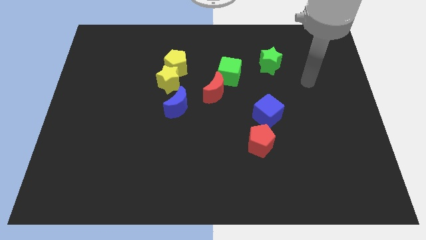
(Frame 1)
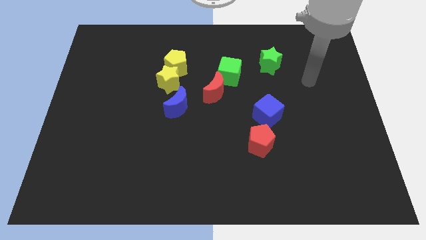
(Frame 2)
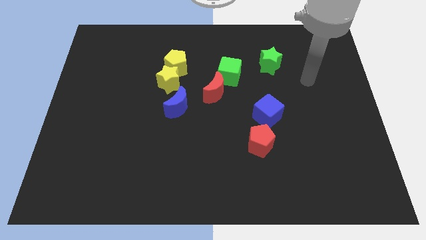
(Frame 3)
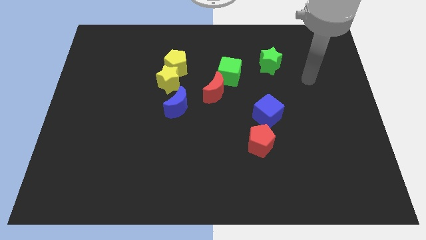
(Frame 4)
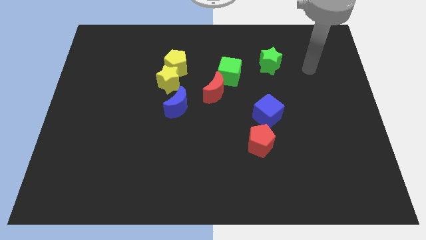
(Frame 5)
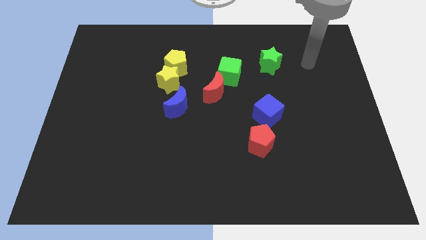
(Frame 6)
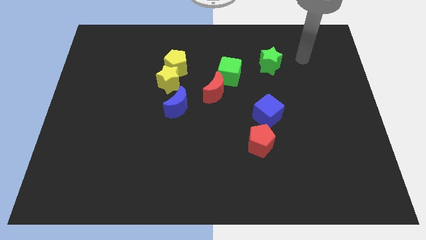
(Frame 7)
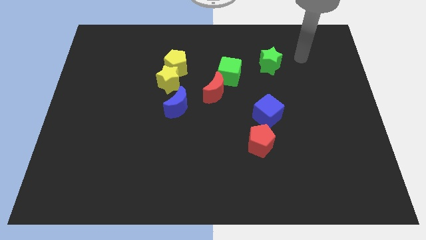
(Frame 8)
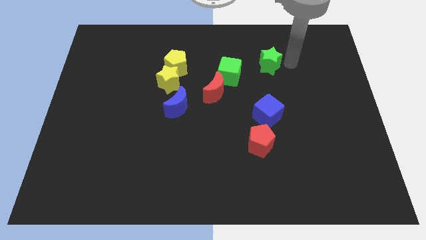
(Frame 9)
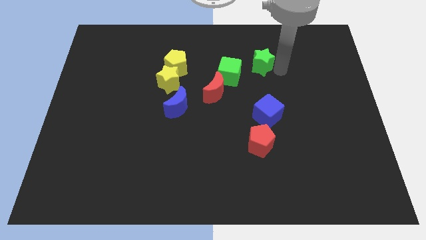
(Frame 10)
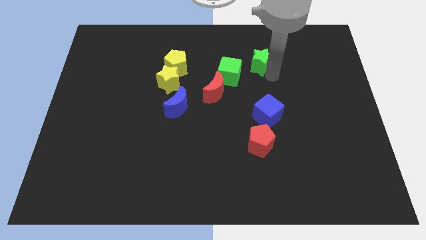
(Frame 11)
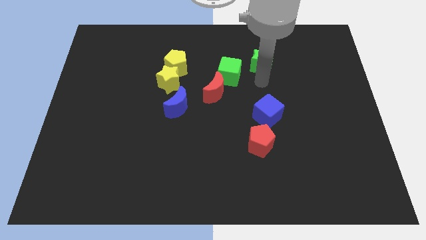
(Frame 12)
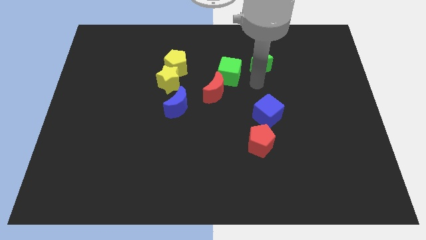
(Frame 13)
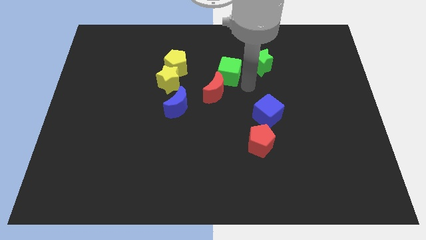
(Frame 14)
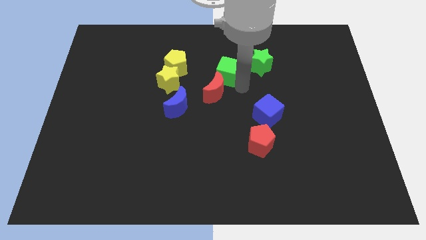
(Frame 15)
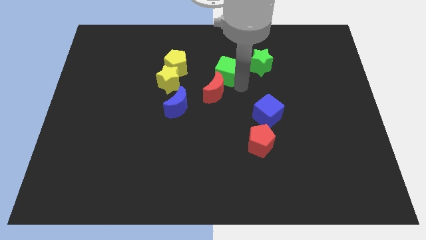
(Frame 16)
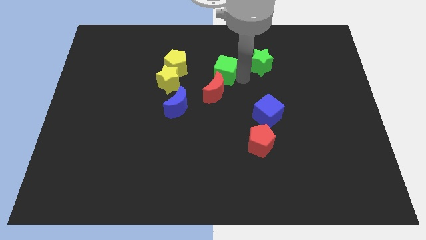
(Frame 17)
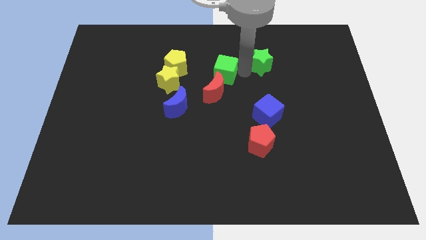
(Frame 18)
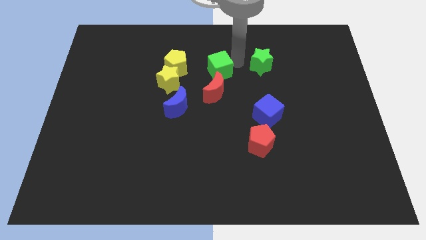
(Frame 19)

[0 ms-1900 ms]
push the green star and the green cube parallel to each other

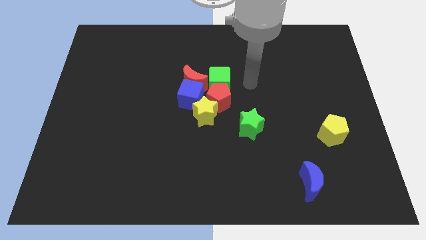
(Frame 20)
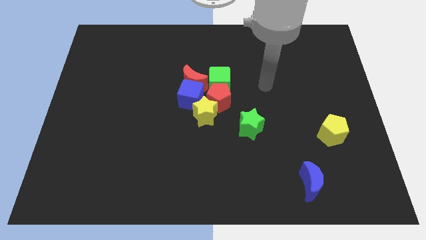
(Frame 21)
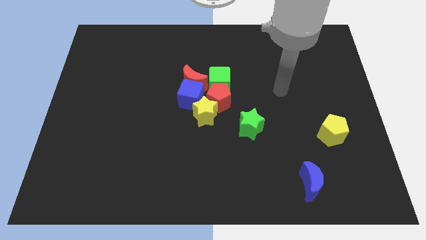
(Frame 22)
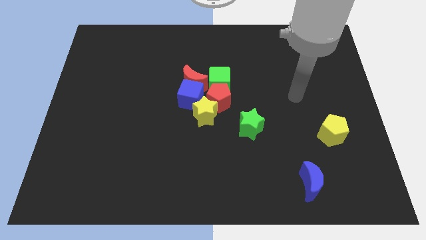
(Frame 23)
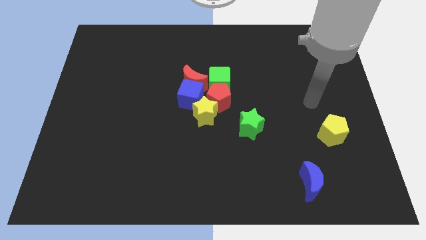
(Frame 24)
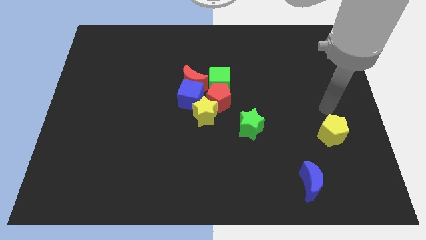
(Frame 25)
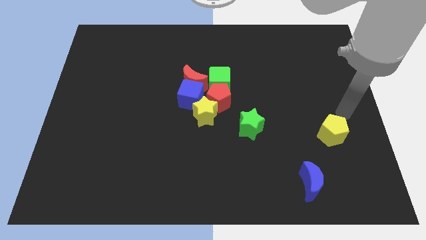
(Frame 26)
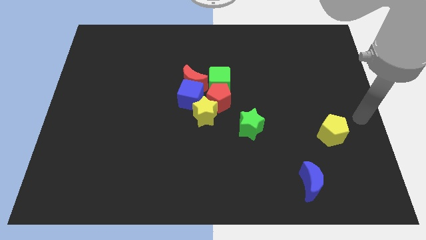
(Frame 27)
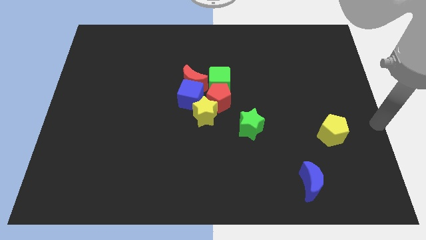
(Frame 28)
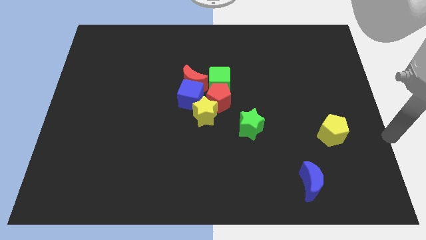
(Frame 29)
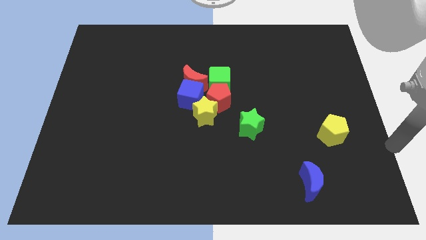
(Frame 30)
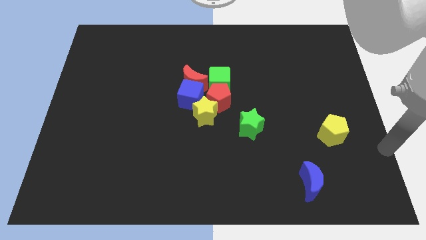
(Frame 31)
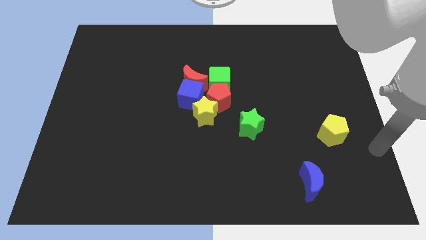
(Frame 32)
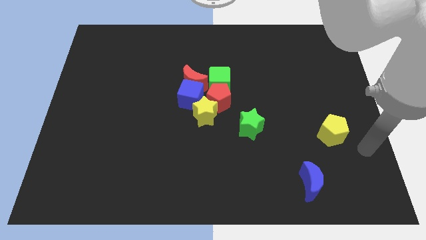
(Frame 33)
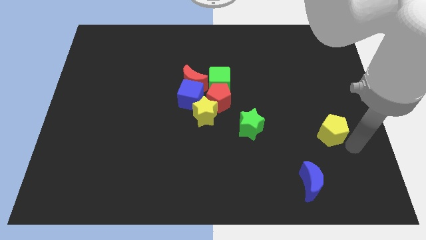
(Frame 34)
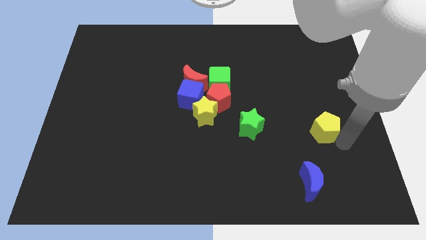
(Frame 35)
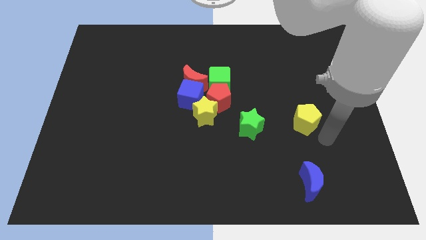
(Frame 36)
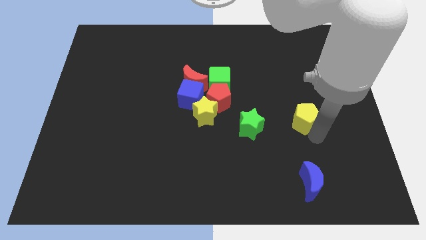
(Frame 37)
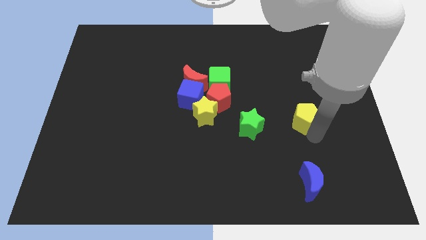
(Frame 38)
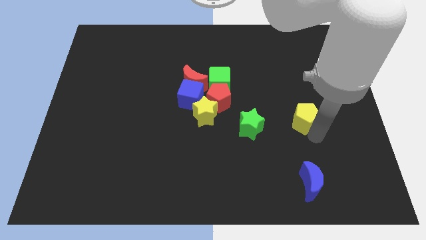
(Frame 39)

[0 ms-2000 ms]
push the yellow pentagon to the top of the blue crescent

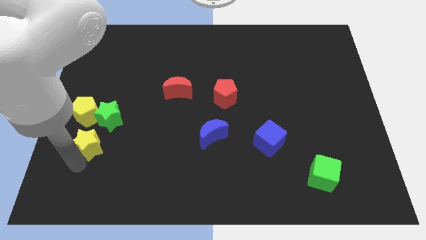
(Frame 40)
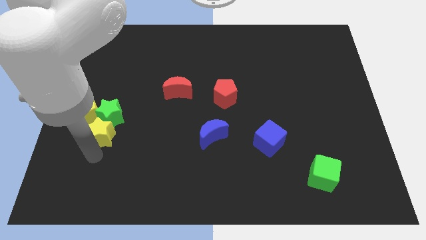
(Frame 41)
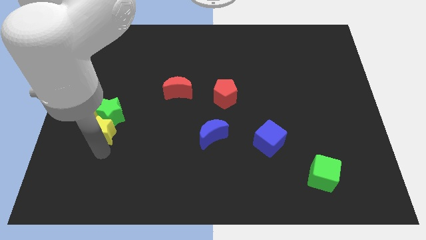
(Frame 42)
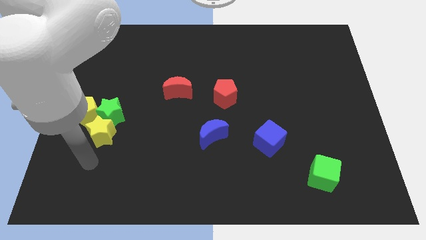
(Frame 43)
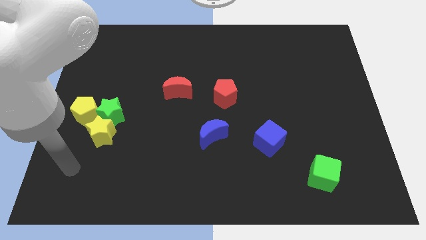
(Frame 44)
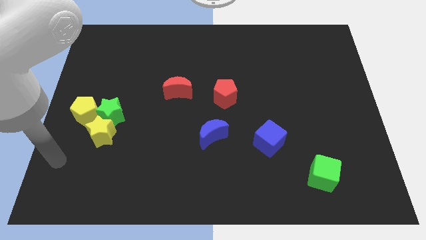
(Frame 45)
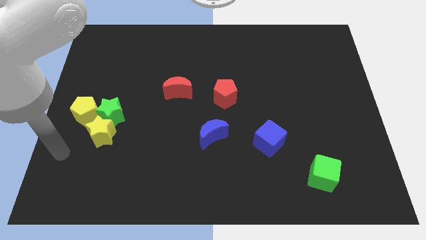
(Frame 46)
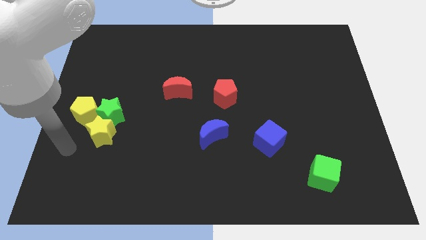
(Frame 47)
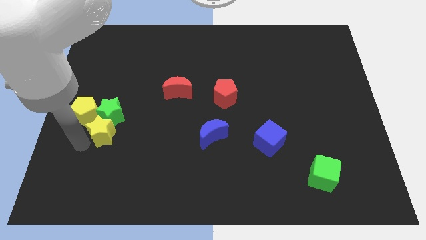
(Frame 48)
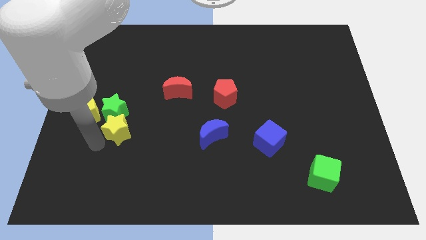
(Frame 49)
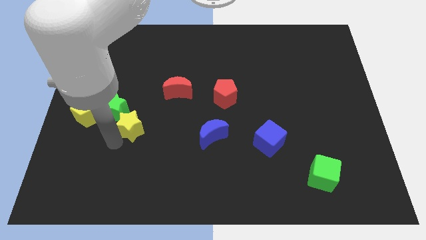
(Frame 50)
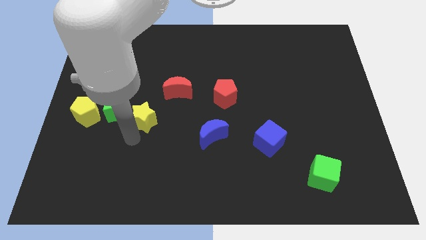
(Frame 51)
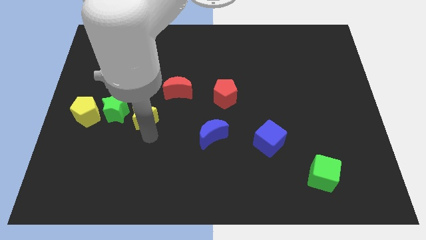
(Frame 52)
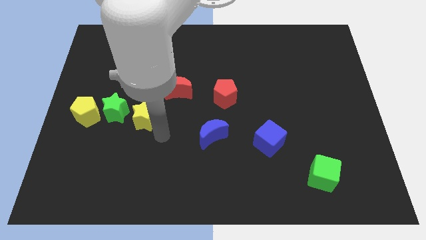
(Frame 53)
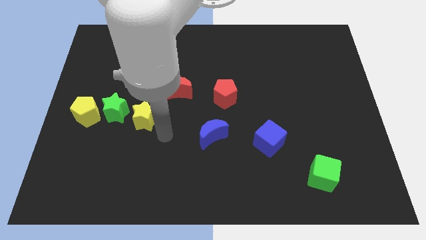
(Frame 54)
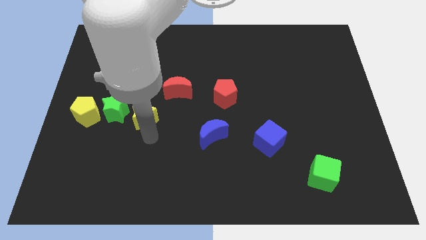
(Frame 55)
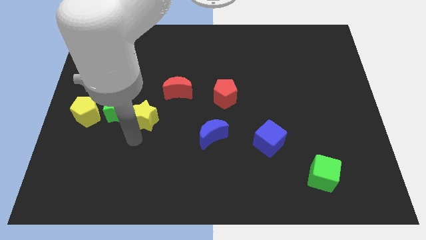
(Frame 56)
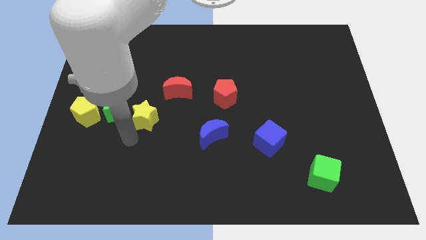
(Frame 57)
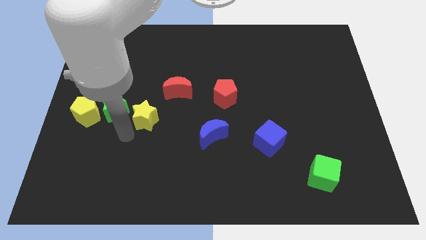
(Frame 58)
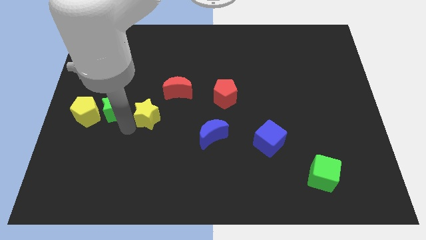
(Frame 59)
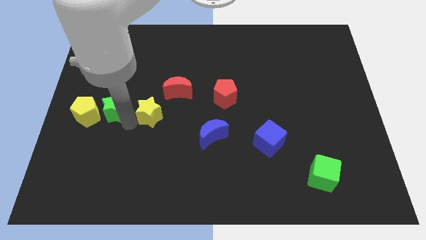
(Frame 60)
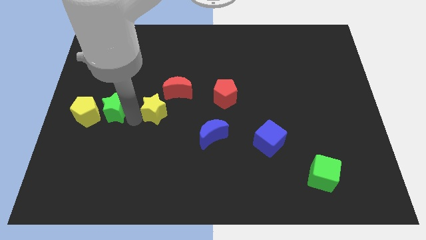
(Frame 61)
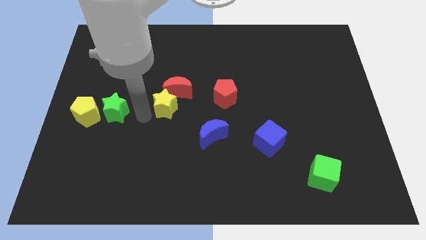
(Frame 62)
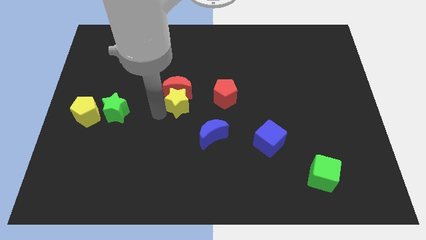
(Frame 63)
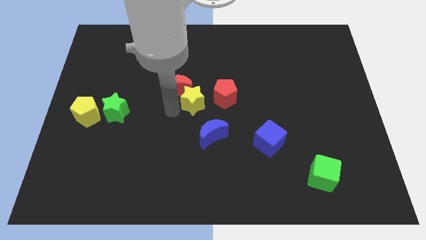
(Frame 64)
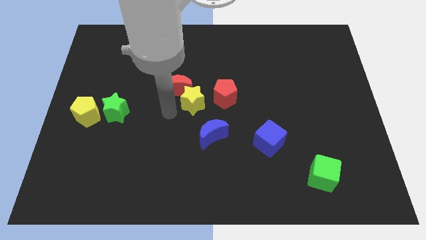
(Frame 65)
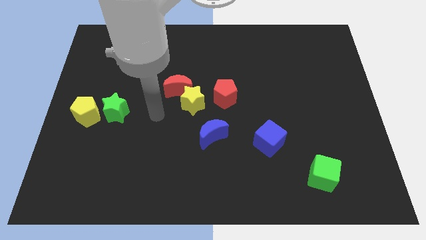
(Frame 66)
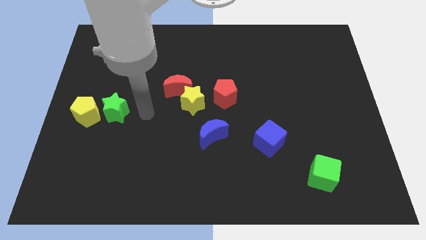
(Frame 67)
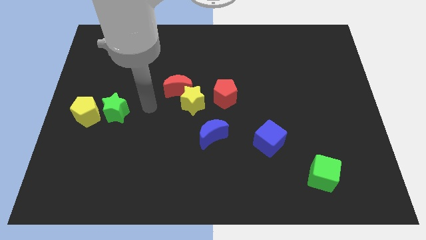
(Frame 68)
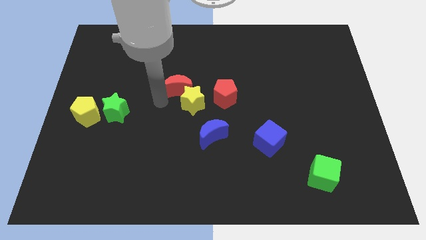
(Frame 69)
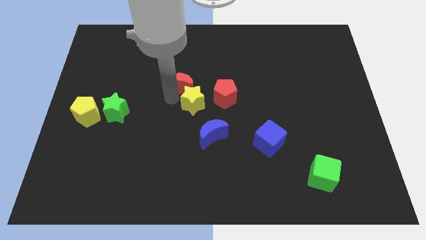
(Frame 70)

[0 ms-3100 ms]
slide yellow star into red moon

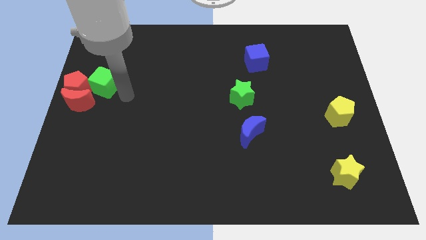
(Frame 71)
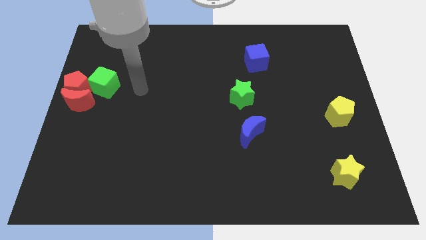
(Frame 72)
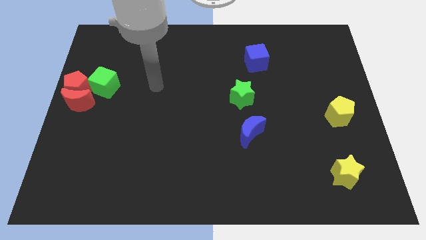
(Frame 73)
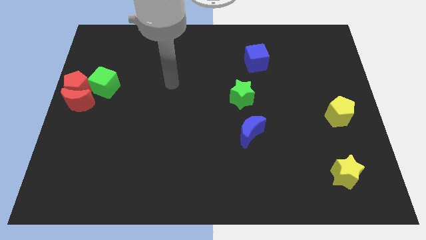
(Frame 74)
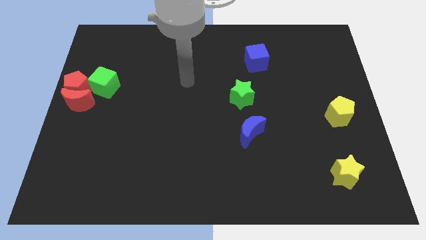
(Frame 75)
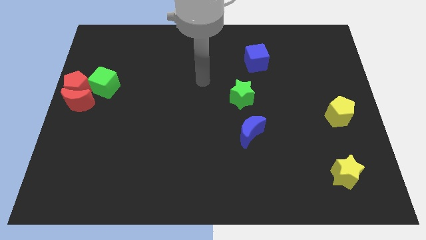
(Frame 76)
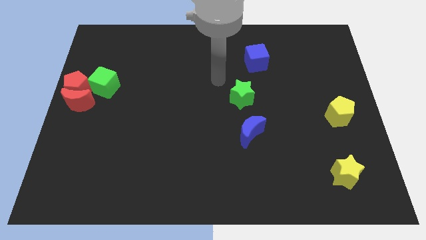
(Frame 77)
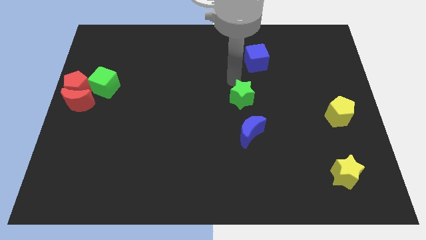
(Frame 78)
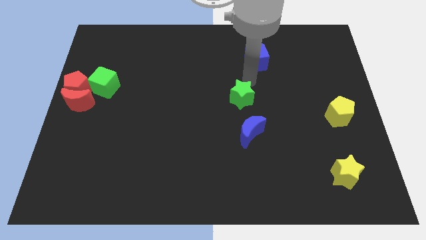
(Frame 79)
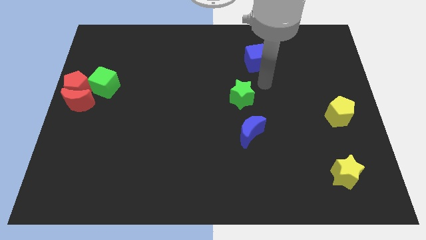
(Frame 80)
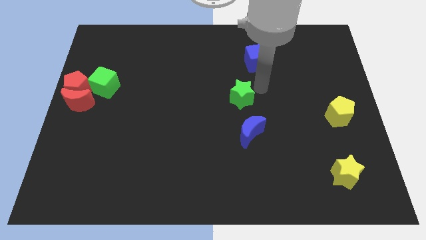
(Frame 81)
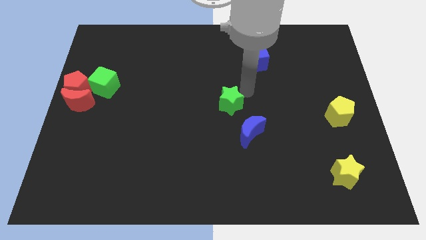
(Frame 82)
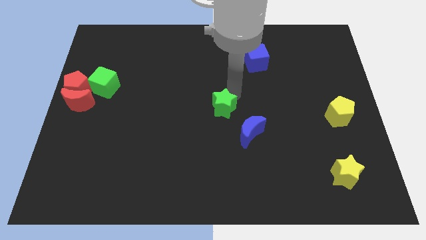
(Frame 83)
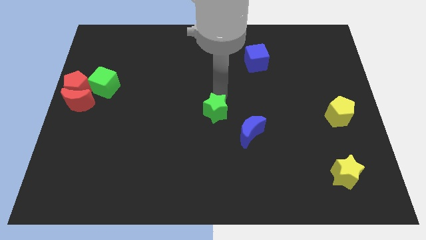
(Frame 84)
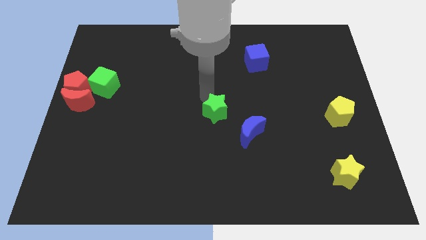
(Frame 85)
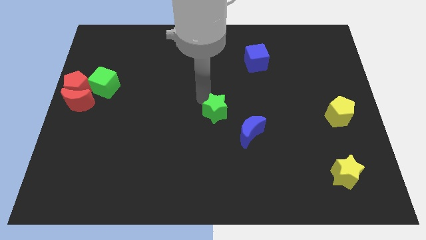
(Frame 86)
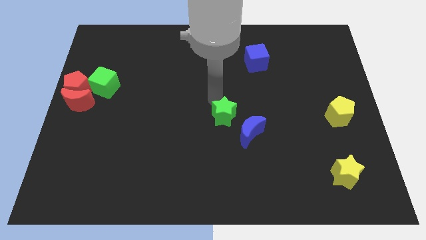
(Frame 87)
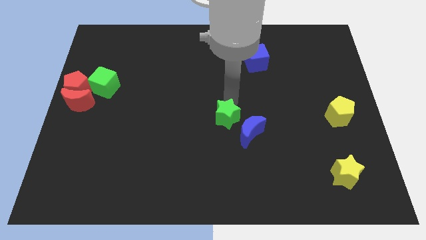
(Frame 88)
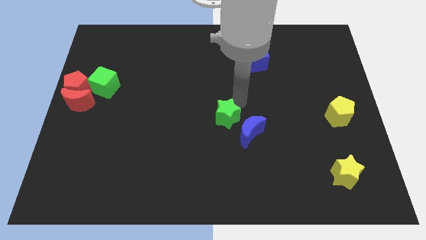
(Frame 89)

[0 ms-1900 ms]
place the green star parallel to the yellow pentagon

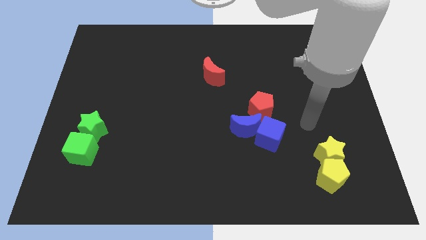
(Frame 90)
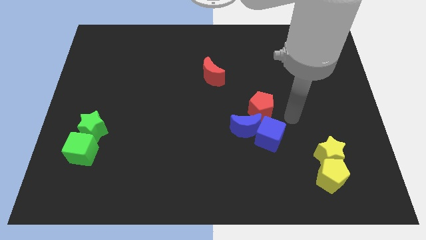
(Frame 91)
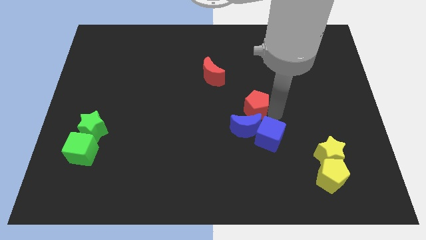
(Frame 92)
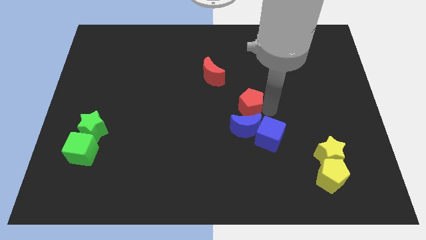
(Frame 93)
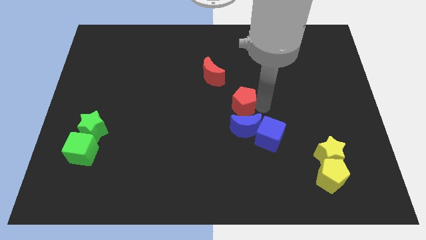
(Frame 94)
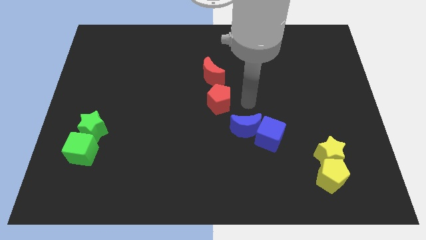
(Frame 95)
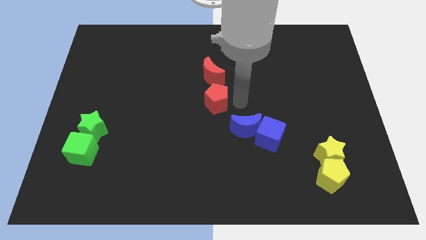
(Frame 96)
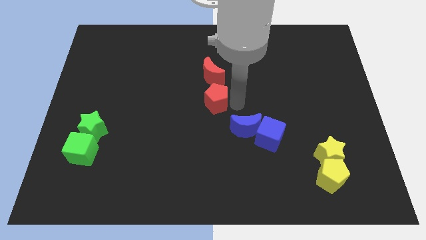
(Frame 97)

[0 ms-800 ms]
push the red pentagon to the bottom of the red crescent
